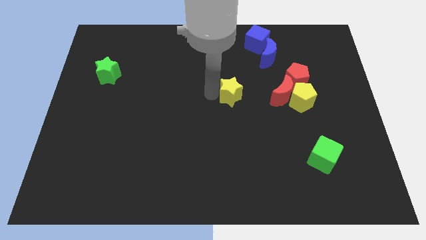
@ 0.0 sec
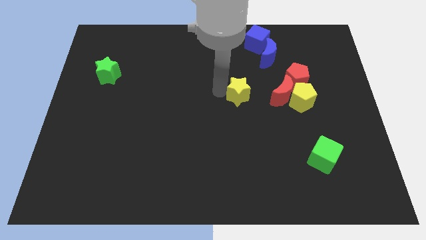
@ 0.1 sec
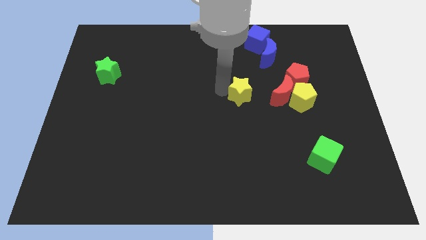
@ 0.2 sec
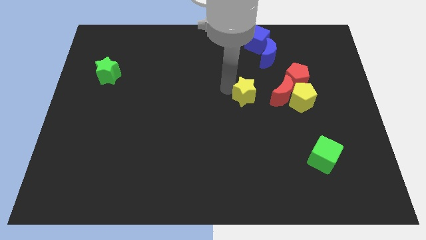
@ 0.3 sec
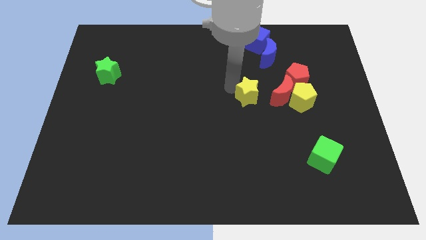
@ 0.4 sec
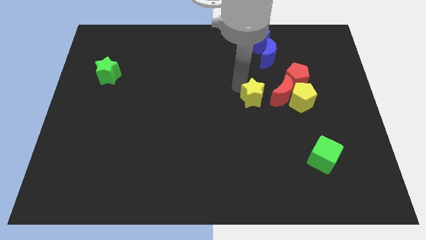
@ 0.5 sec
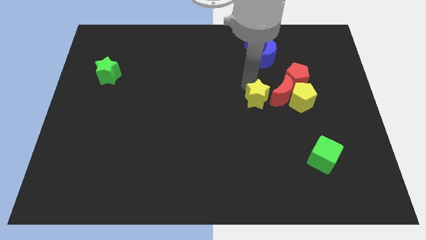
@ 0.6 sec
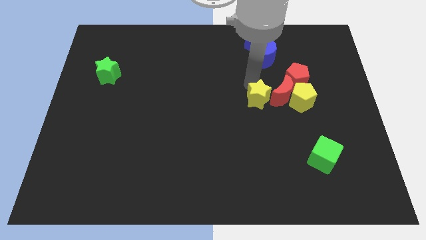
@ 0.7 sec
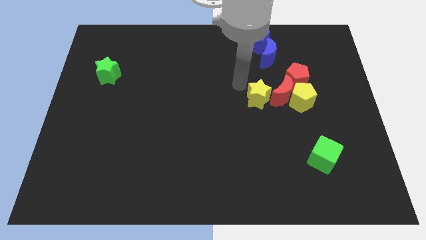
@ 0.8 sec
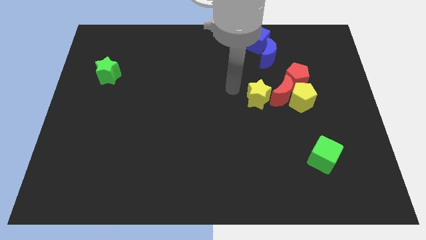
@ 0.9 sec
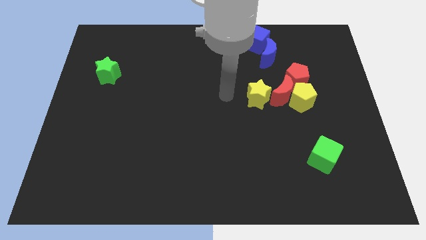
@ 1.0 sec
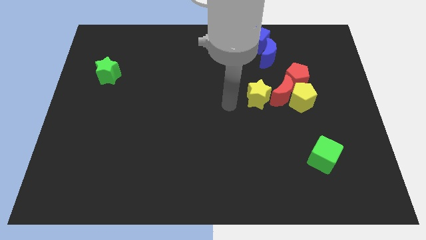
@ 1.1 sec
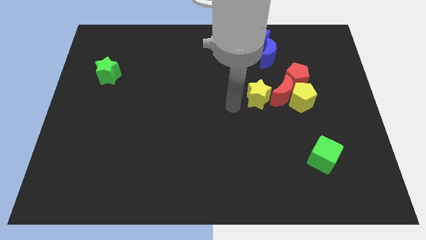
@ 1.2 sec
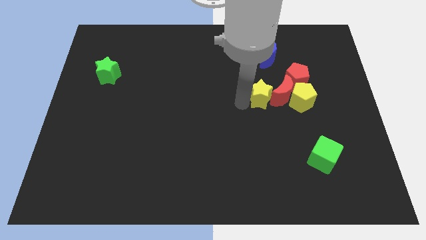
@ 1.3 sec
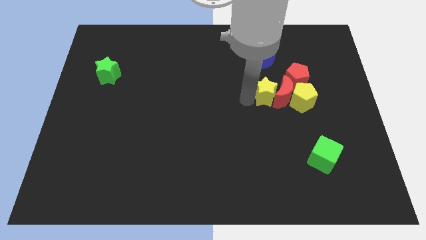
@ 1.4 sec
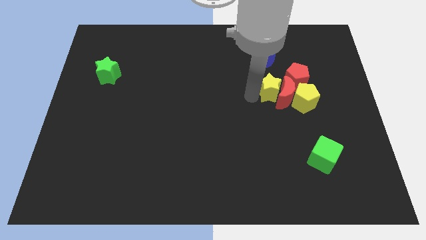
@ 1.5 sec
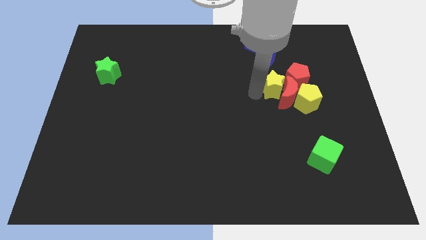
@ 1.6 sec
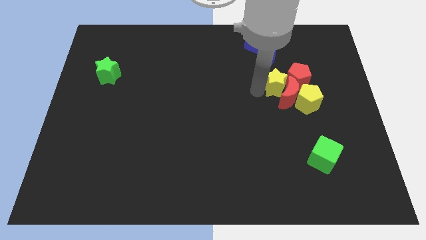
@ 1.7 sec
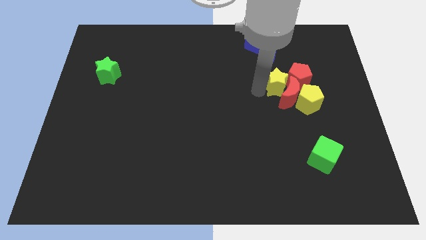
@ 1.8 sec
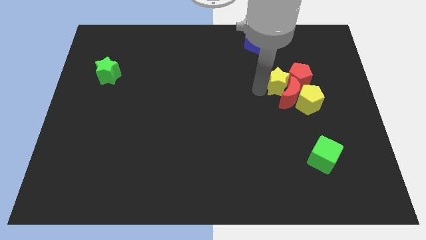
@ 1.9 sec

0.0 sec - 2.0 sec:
push the yellow star into red crescent

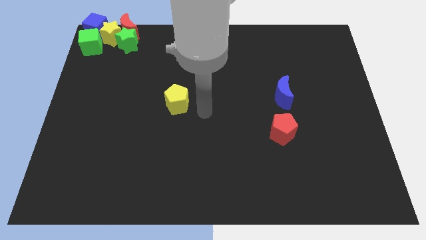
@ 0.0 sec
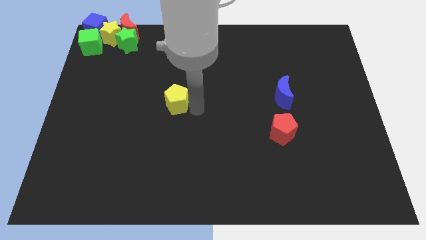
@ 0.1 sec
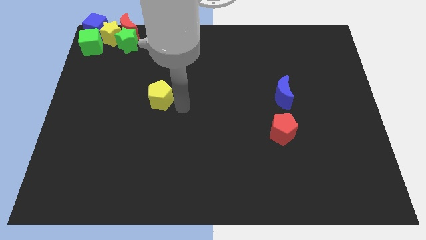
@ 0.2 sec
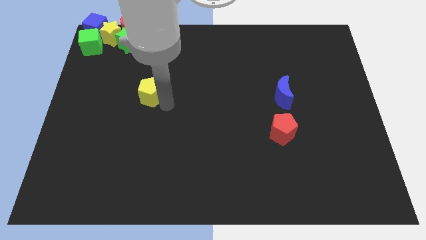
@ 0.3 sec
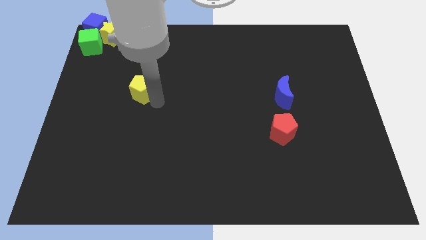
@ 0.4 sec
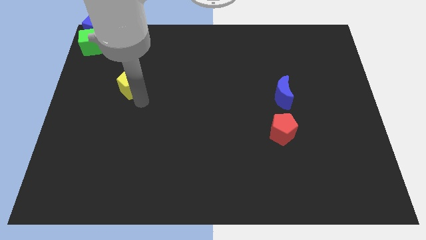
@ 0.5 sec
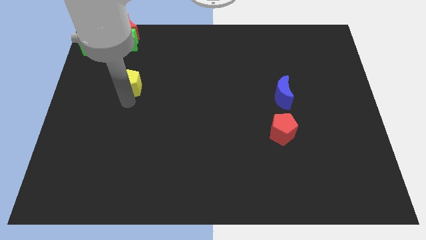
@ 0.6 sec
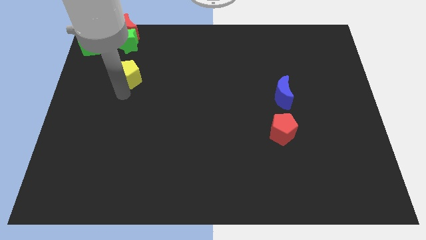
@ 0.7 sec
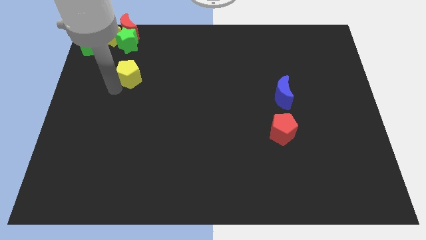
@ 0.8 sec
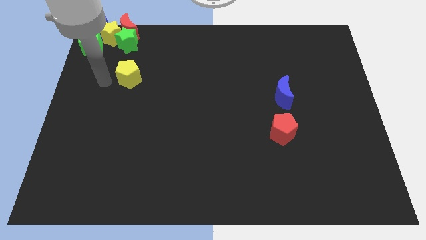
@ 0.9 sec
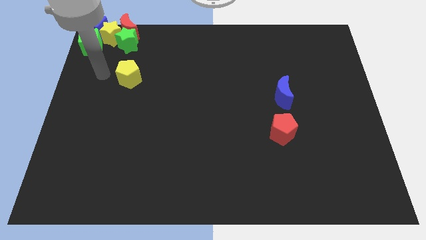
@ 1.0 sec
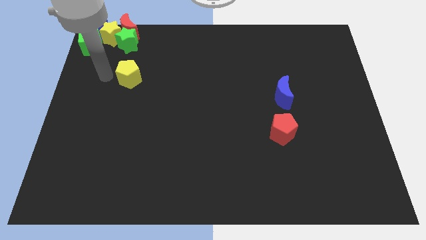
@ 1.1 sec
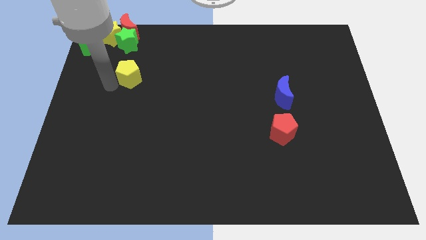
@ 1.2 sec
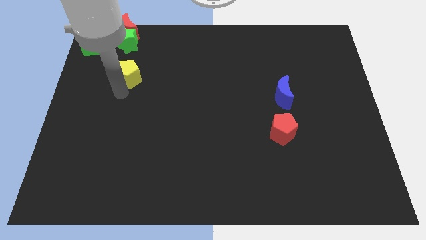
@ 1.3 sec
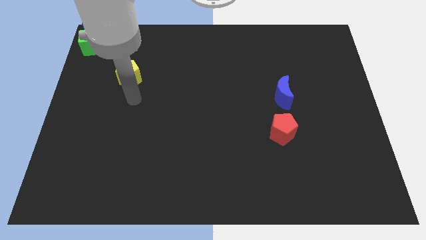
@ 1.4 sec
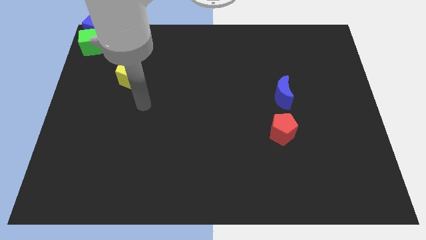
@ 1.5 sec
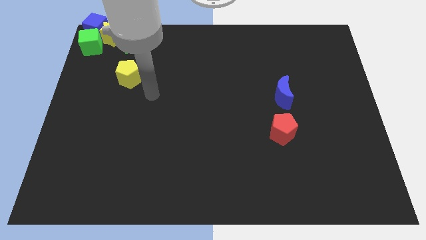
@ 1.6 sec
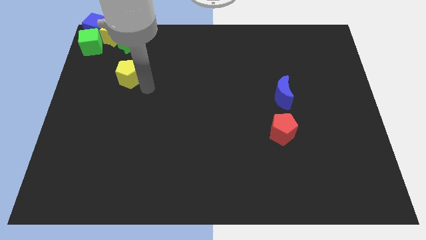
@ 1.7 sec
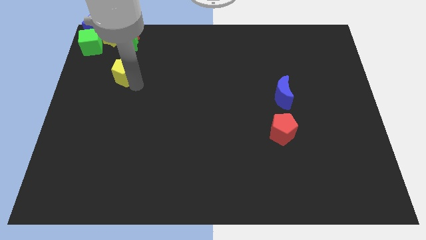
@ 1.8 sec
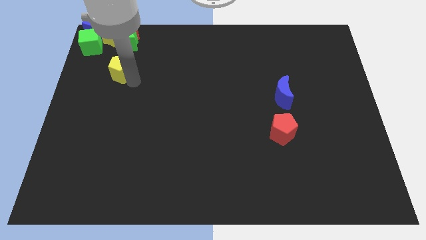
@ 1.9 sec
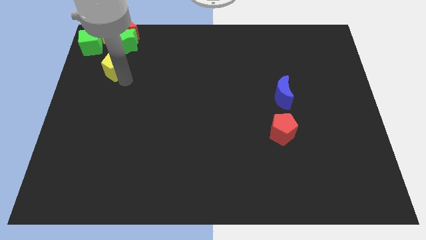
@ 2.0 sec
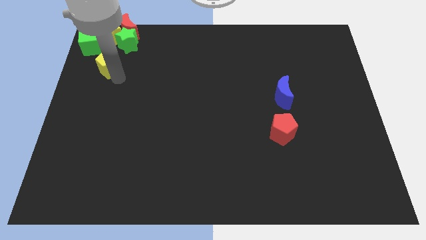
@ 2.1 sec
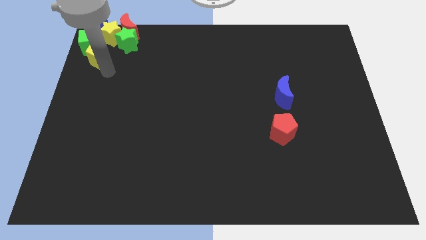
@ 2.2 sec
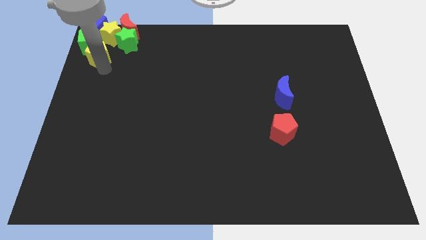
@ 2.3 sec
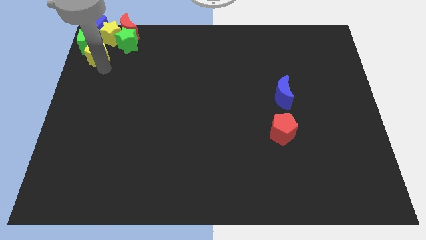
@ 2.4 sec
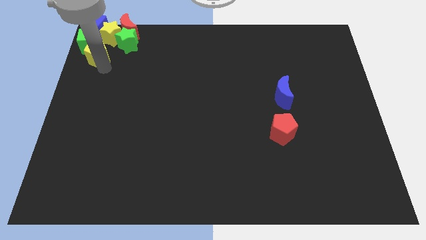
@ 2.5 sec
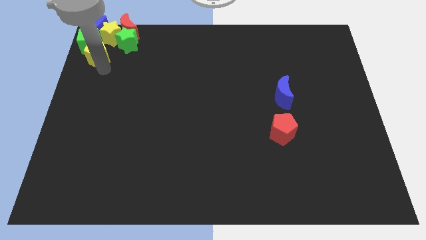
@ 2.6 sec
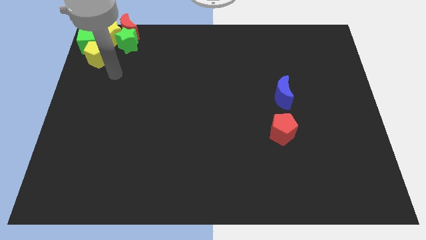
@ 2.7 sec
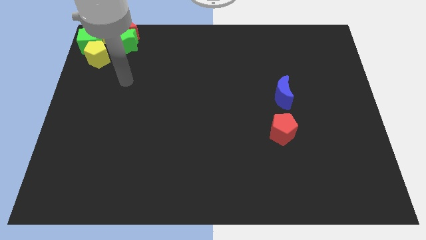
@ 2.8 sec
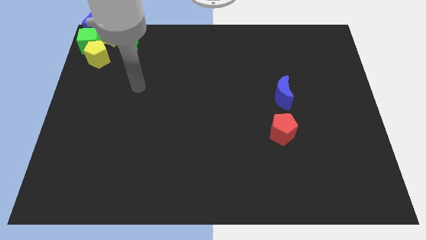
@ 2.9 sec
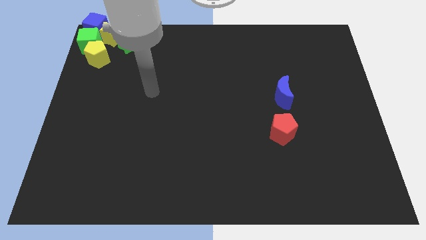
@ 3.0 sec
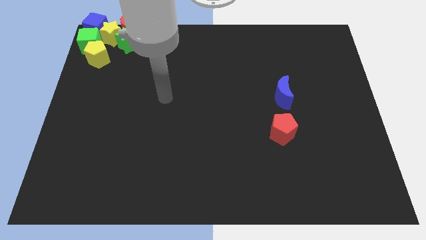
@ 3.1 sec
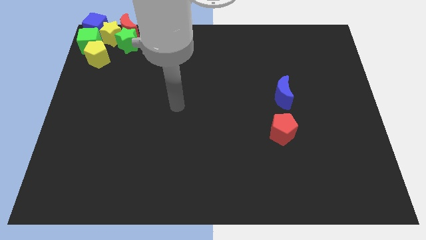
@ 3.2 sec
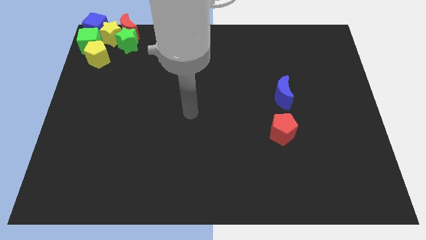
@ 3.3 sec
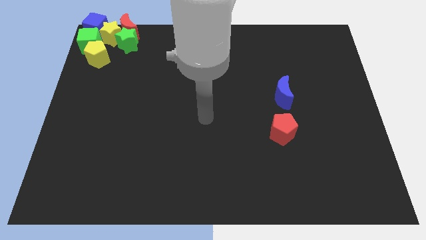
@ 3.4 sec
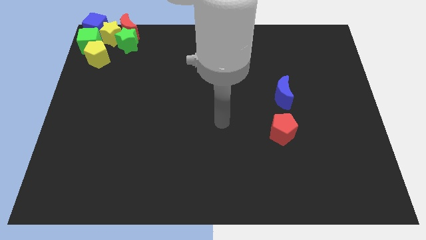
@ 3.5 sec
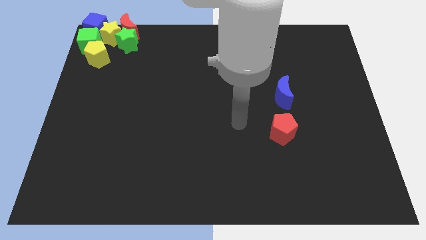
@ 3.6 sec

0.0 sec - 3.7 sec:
place the yellow pentagon below the green cube

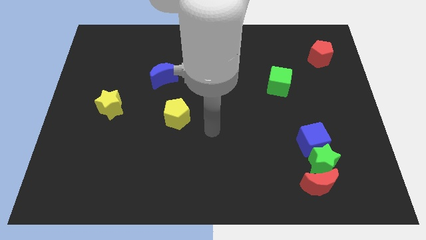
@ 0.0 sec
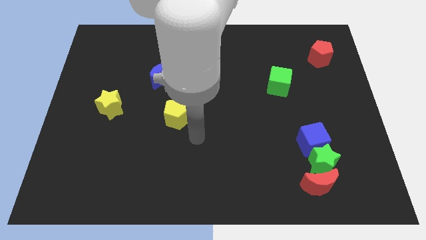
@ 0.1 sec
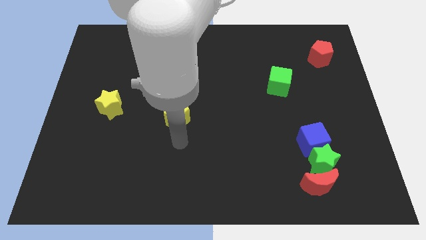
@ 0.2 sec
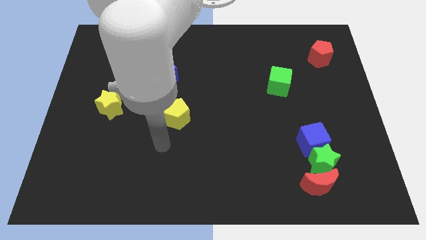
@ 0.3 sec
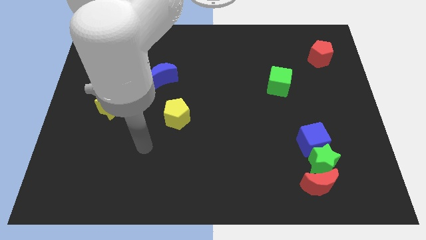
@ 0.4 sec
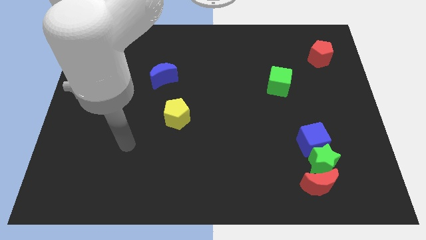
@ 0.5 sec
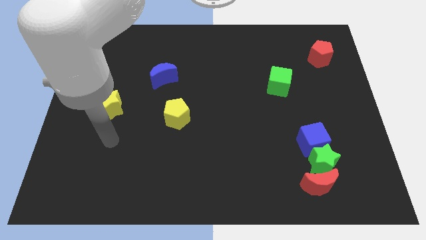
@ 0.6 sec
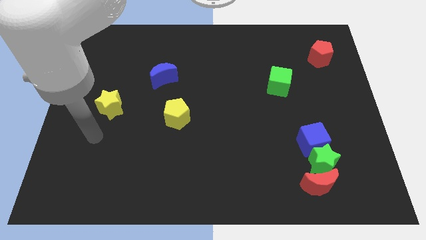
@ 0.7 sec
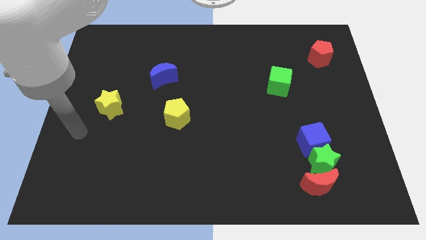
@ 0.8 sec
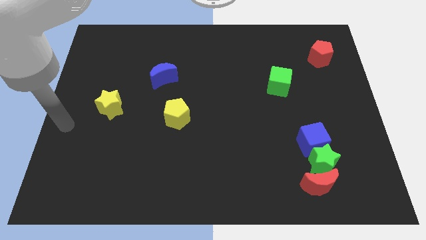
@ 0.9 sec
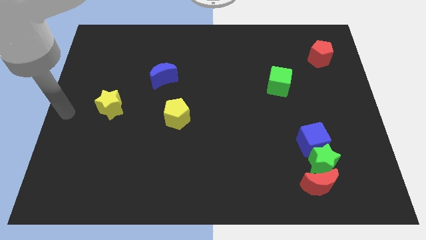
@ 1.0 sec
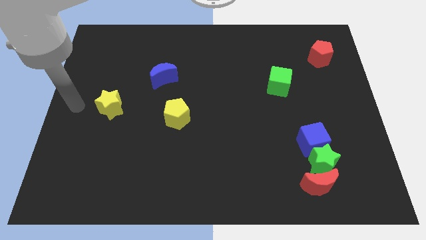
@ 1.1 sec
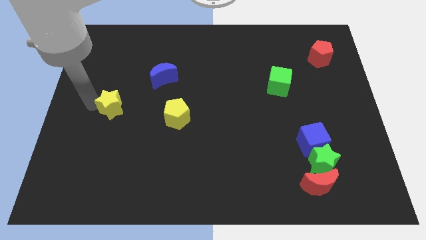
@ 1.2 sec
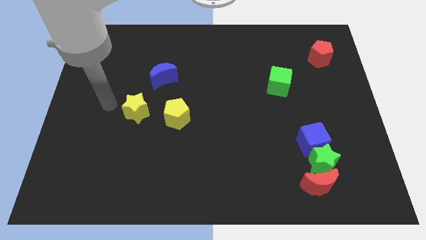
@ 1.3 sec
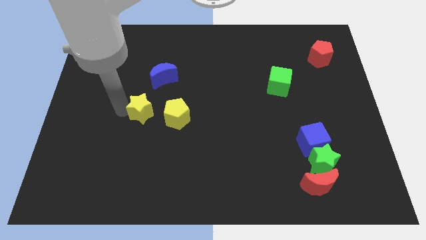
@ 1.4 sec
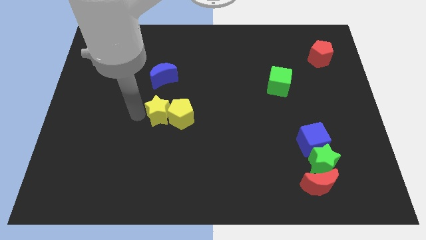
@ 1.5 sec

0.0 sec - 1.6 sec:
push yellow star in to yellow pentagon

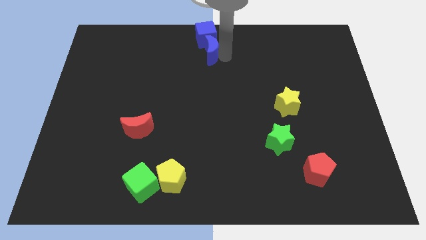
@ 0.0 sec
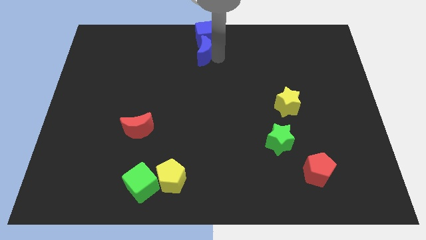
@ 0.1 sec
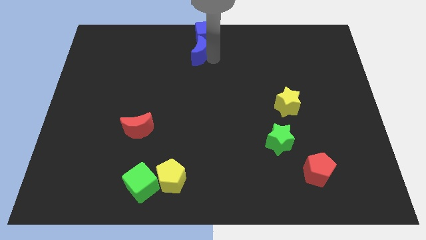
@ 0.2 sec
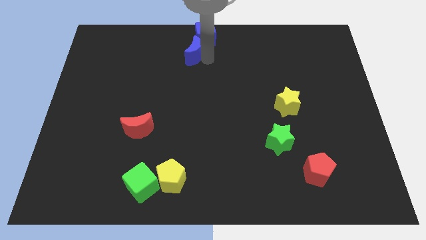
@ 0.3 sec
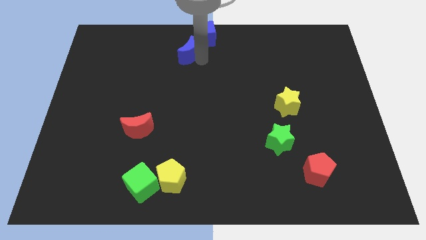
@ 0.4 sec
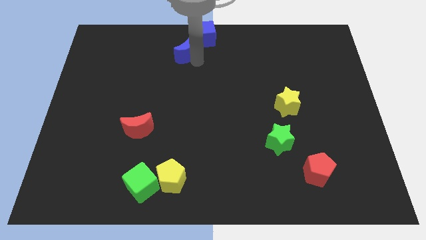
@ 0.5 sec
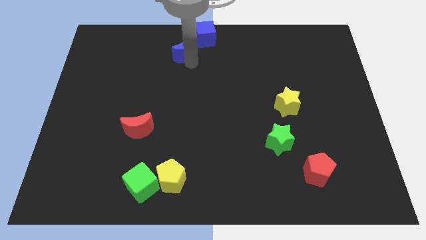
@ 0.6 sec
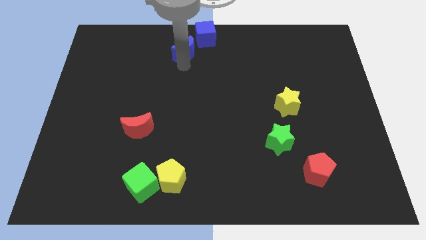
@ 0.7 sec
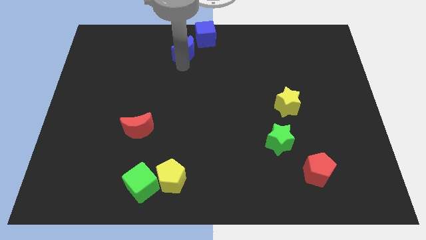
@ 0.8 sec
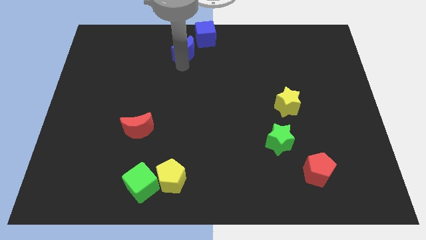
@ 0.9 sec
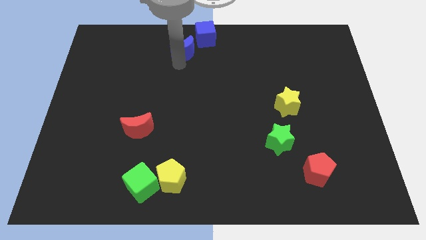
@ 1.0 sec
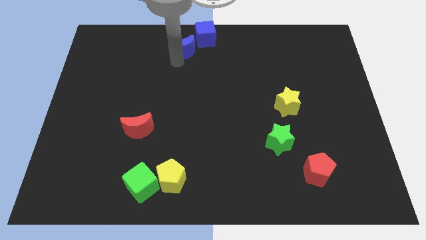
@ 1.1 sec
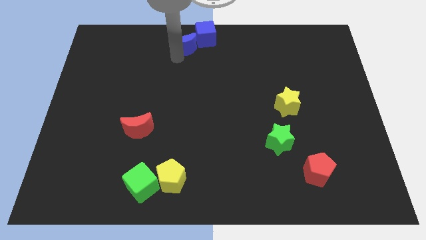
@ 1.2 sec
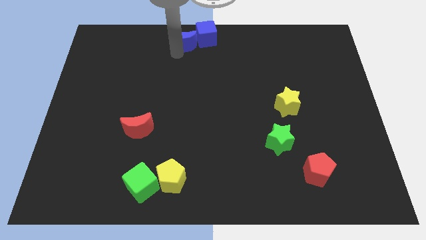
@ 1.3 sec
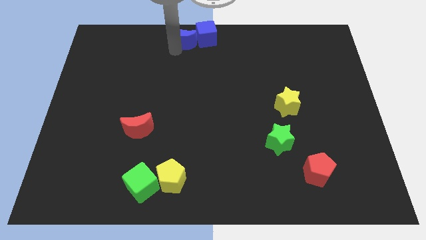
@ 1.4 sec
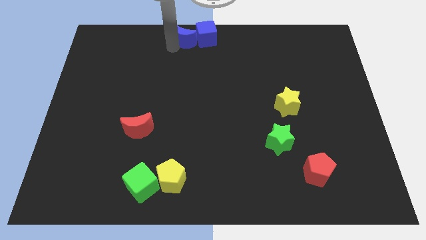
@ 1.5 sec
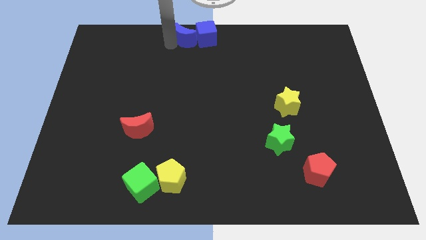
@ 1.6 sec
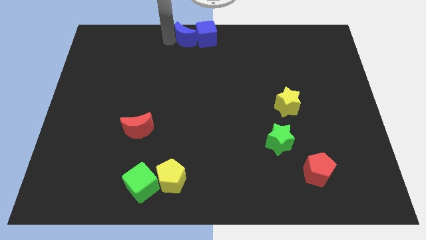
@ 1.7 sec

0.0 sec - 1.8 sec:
push the blue crescent to the left of the blue cube
